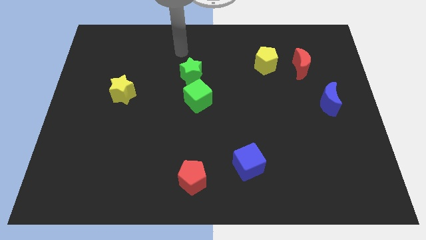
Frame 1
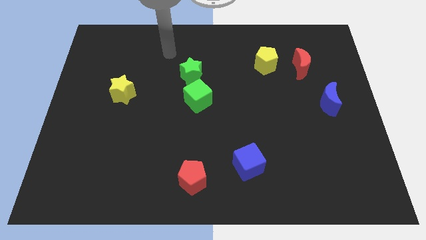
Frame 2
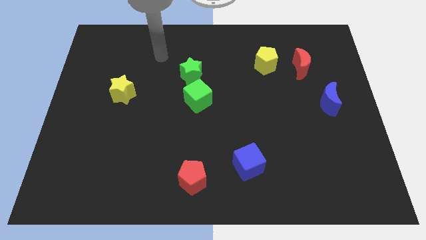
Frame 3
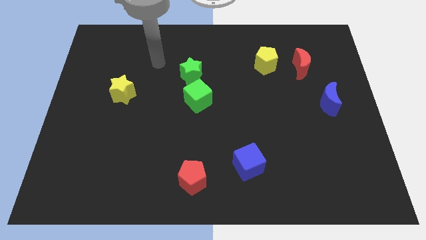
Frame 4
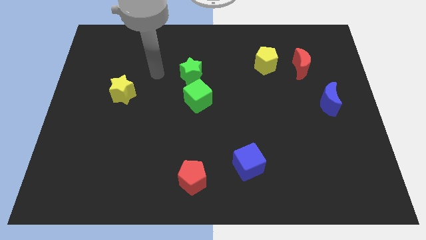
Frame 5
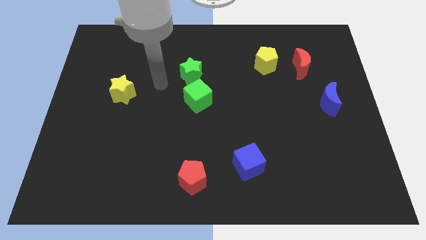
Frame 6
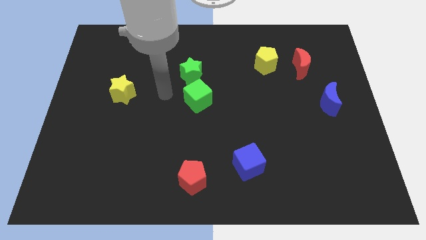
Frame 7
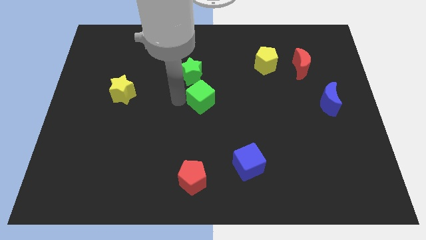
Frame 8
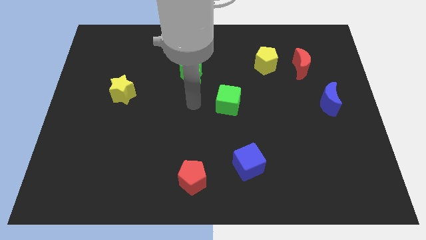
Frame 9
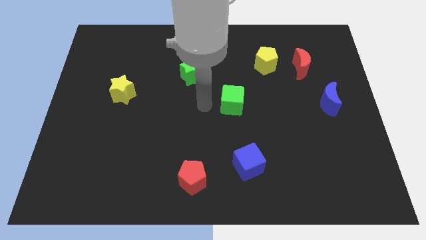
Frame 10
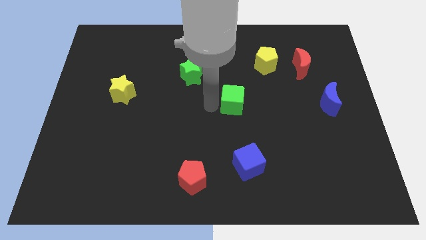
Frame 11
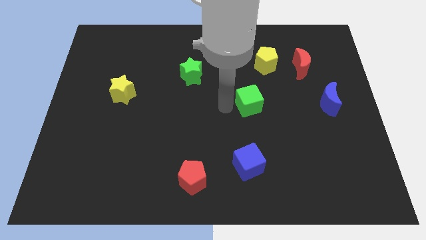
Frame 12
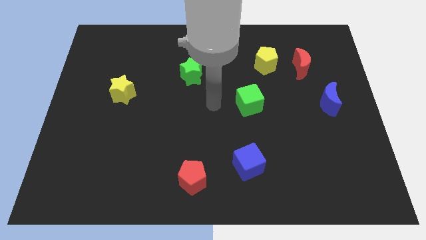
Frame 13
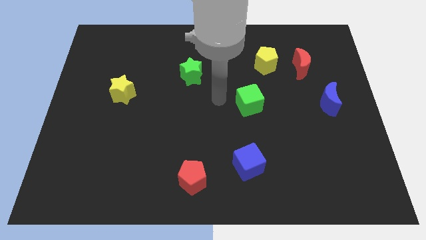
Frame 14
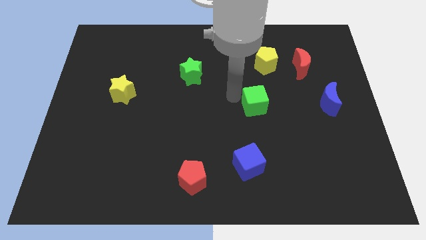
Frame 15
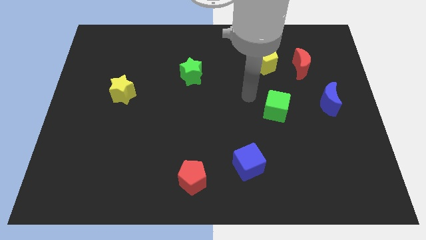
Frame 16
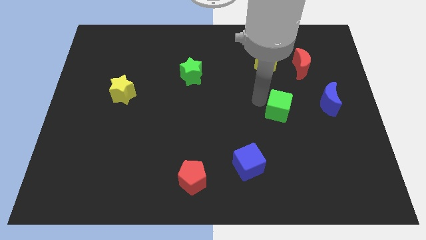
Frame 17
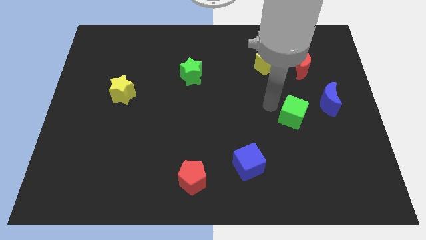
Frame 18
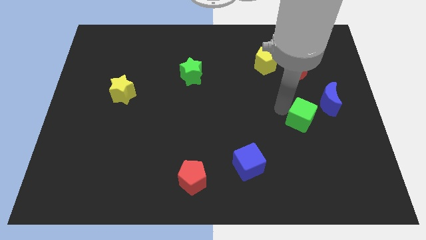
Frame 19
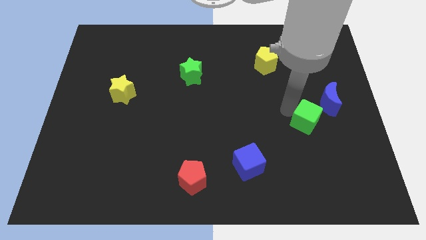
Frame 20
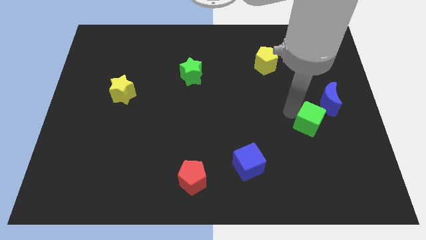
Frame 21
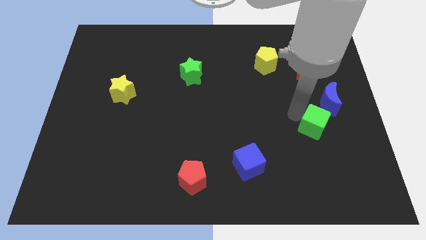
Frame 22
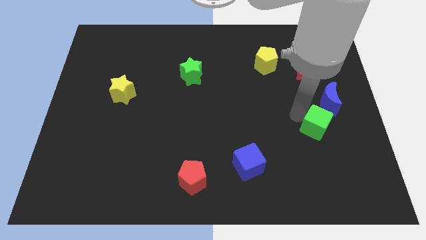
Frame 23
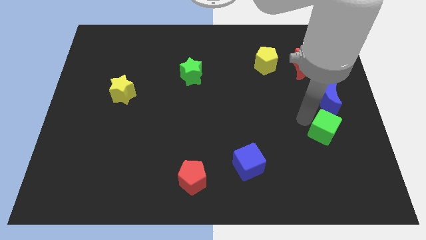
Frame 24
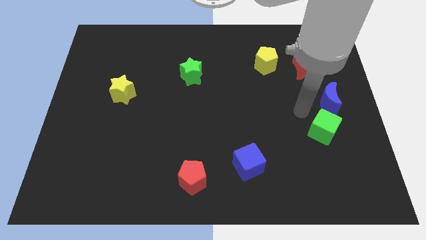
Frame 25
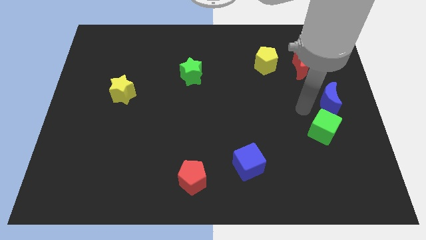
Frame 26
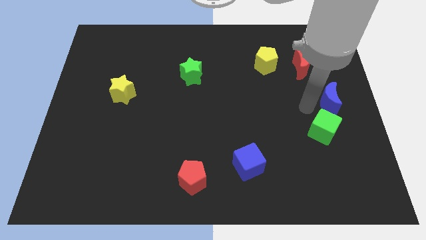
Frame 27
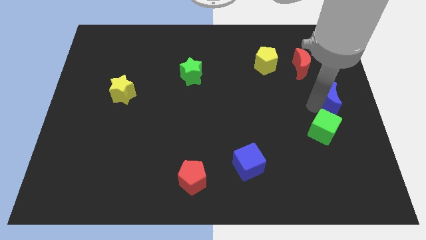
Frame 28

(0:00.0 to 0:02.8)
move the green cube close to the blue crescent

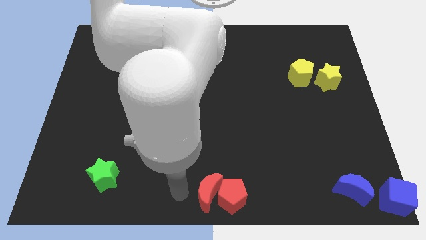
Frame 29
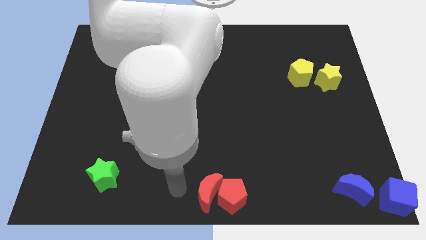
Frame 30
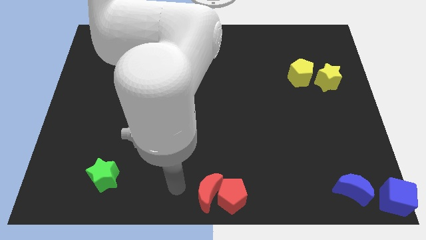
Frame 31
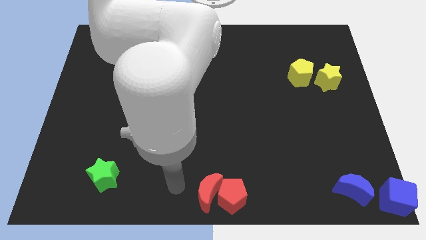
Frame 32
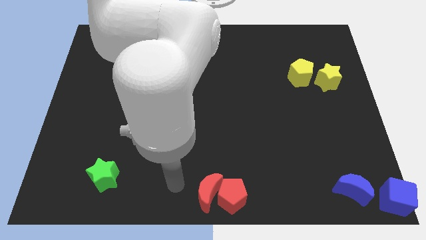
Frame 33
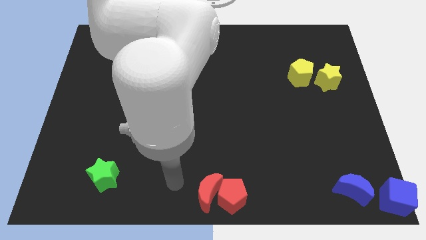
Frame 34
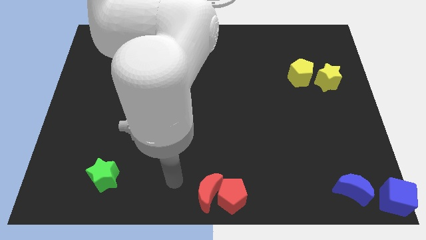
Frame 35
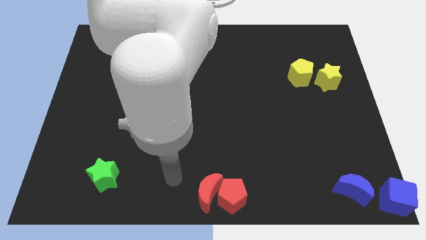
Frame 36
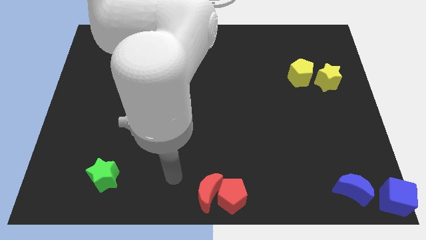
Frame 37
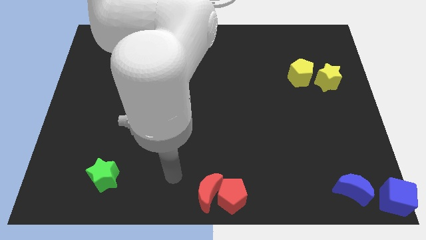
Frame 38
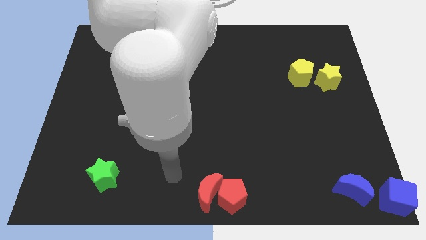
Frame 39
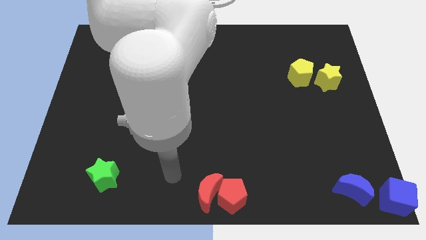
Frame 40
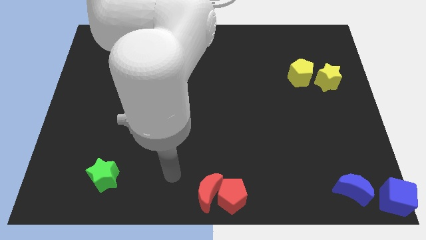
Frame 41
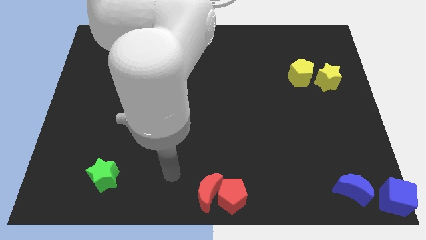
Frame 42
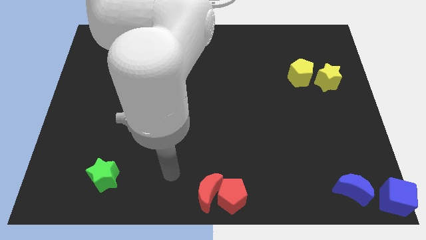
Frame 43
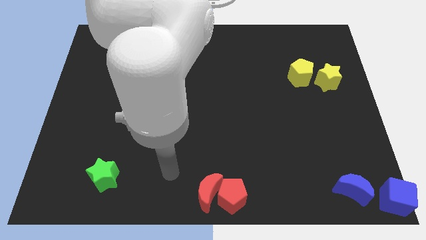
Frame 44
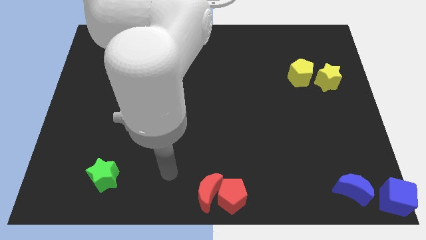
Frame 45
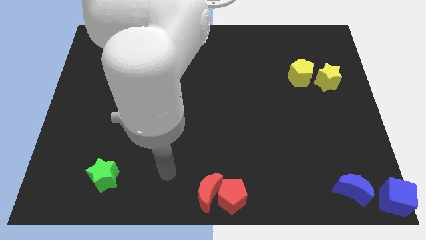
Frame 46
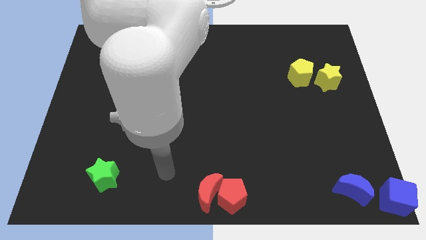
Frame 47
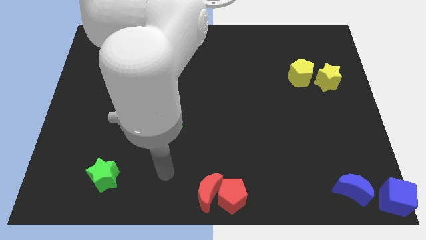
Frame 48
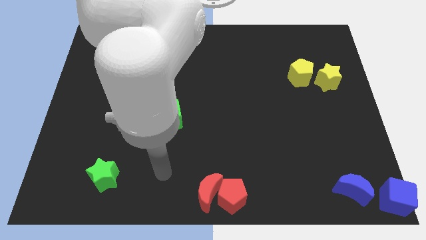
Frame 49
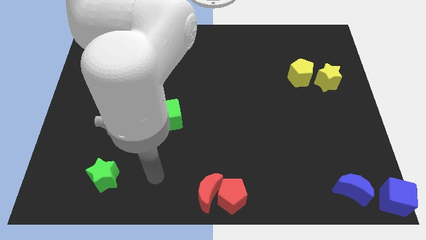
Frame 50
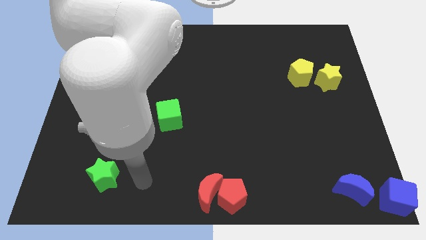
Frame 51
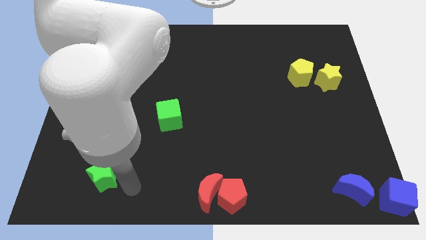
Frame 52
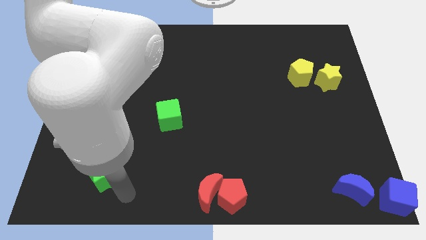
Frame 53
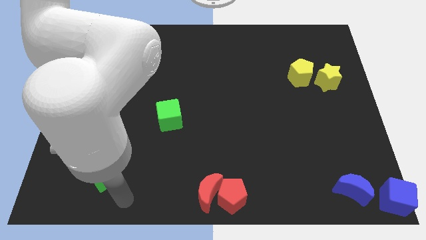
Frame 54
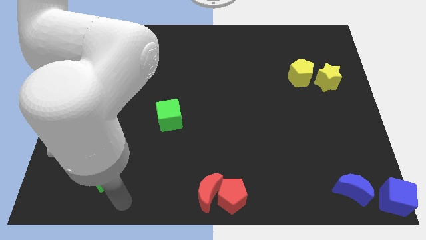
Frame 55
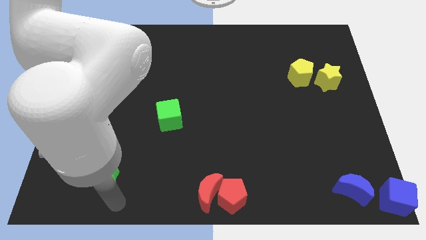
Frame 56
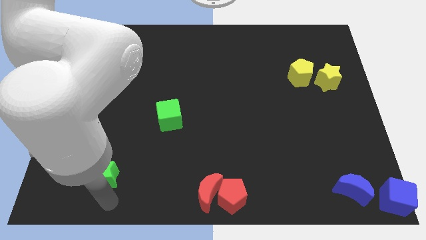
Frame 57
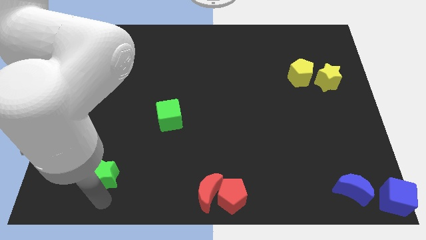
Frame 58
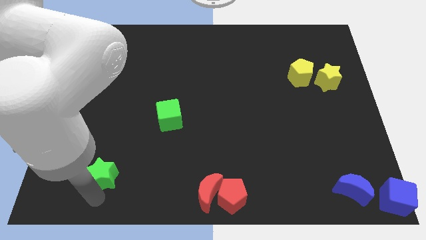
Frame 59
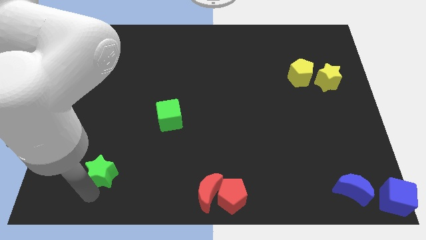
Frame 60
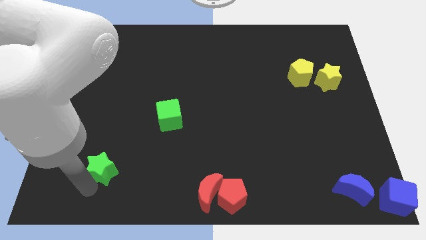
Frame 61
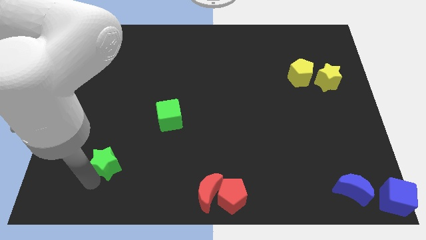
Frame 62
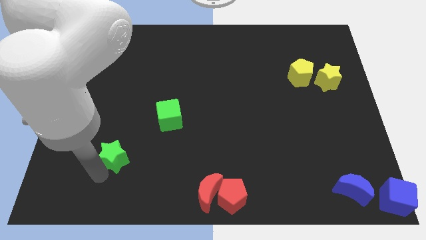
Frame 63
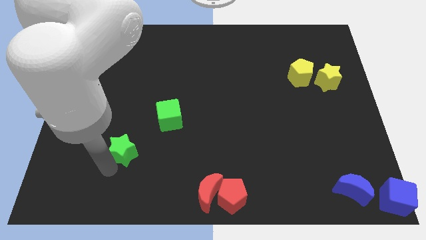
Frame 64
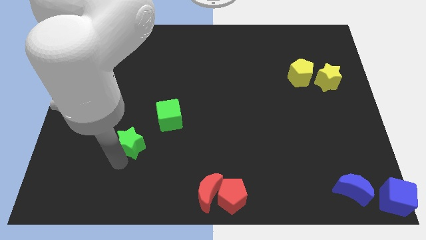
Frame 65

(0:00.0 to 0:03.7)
move green star towards the green cube

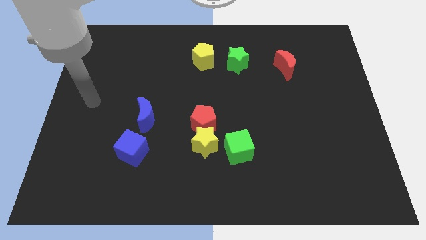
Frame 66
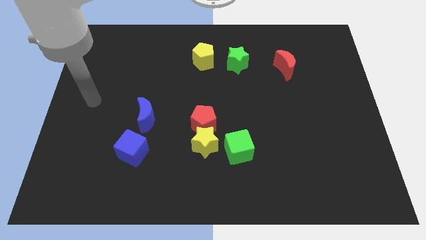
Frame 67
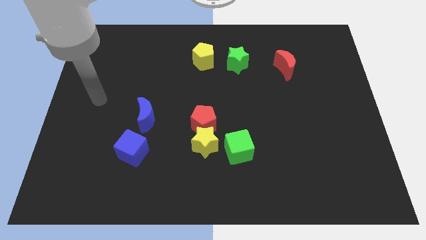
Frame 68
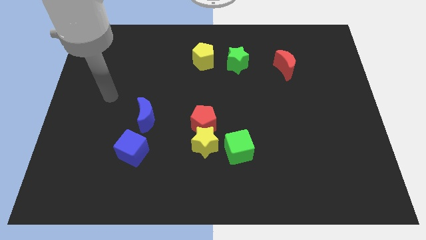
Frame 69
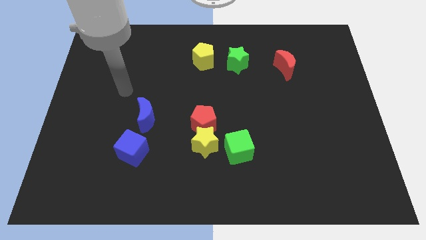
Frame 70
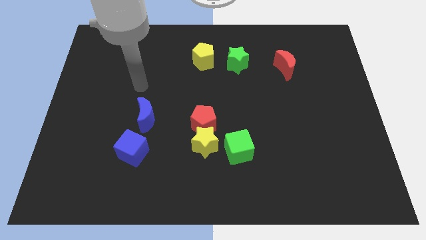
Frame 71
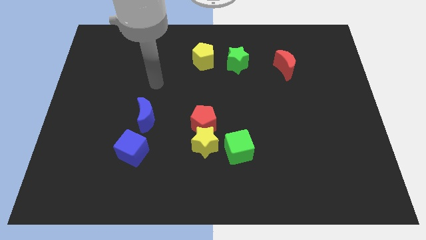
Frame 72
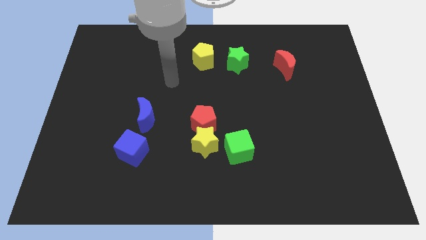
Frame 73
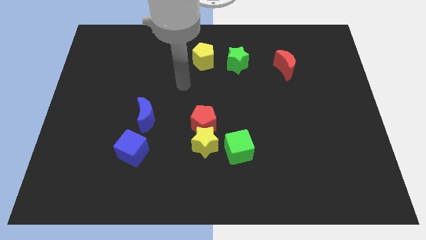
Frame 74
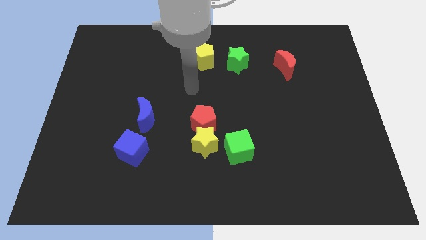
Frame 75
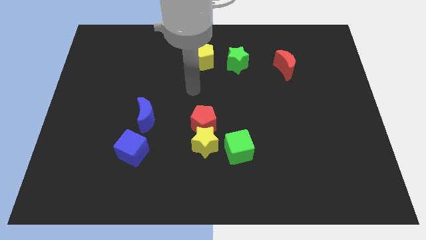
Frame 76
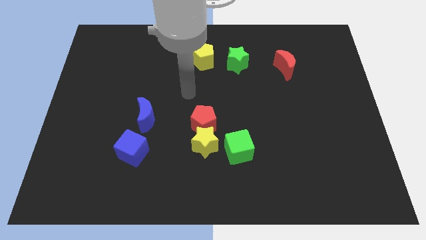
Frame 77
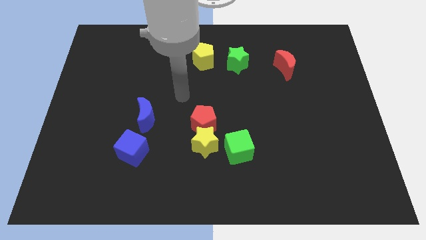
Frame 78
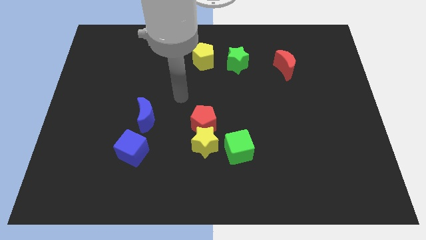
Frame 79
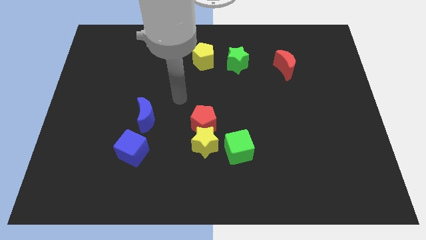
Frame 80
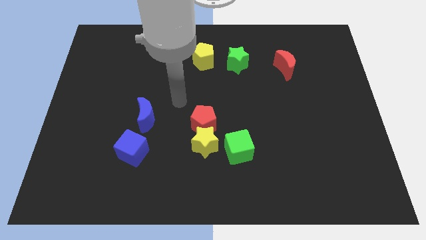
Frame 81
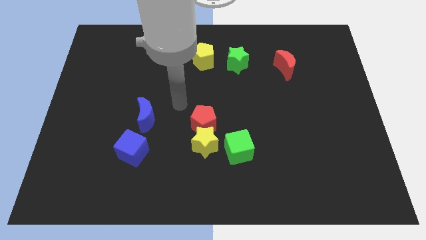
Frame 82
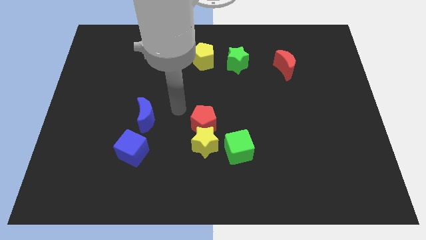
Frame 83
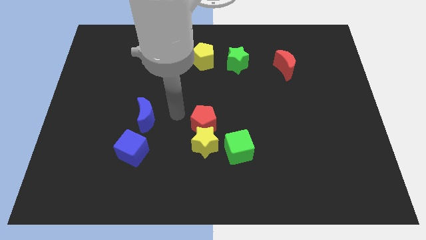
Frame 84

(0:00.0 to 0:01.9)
move your arm left to the red pentagon

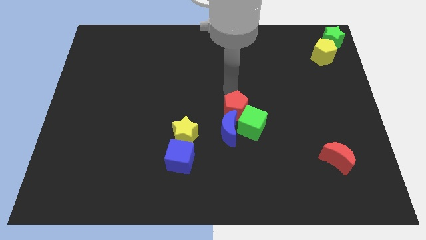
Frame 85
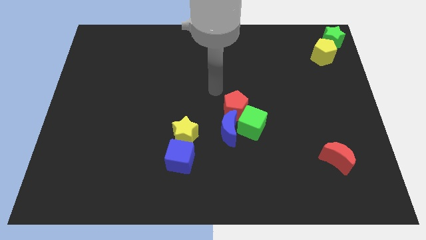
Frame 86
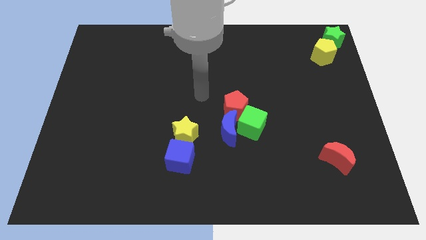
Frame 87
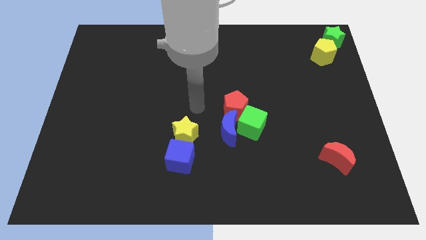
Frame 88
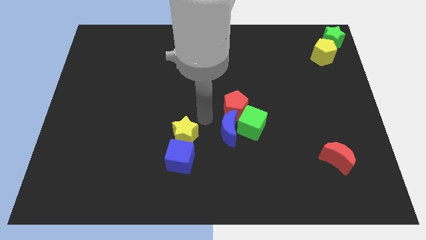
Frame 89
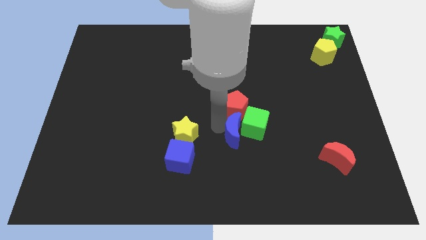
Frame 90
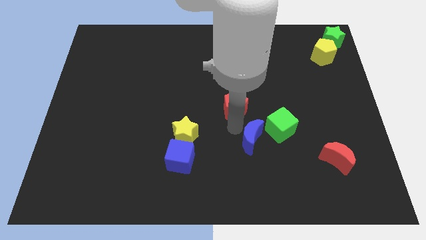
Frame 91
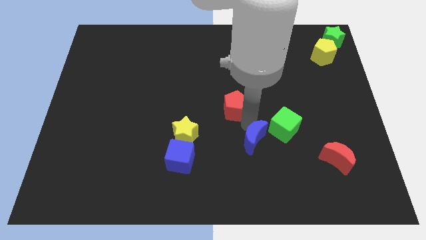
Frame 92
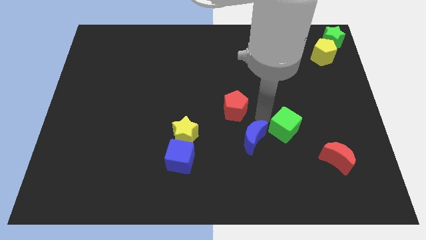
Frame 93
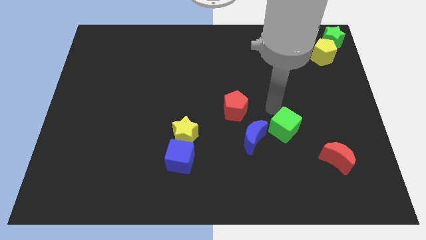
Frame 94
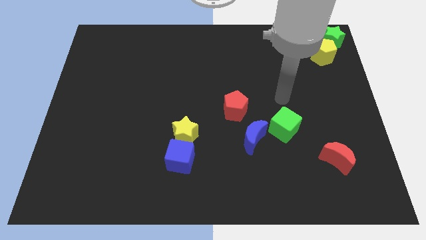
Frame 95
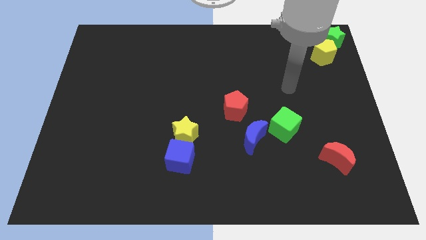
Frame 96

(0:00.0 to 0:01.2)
push the blue crescent slightly to the right
